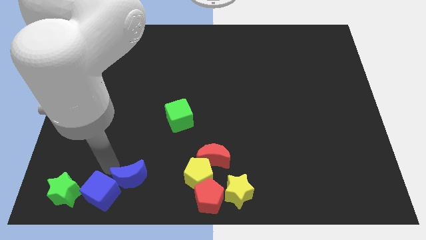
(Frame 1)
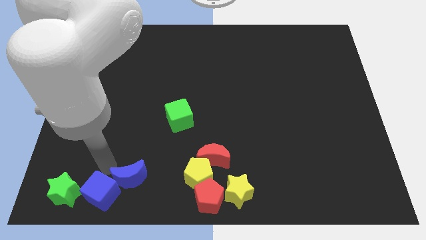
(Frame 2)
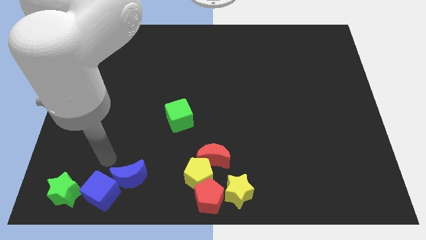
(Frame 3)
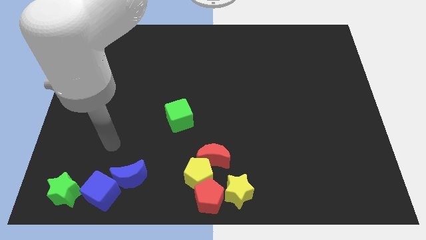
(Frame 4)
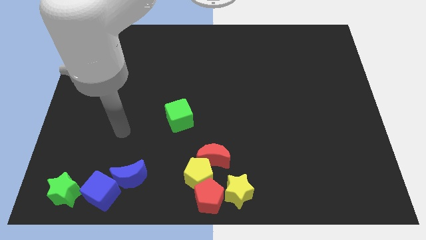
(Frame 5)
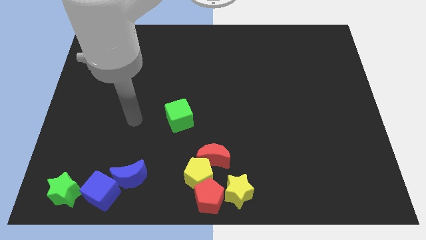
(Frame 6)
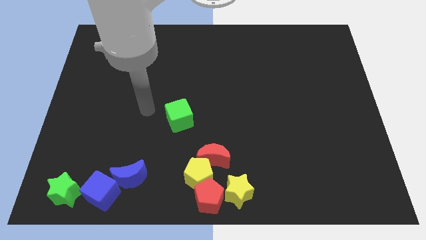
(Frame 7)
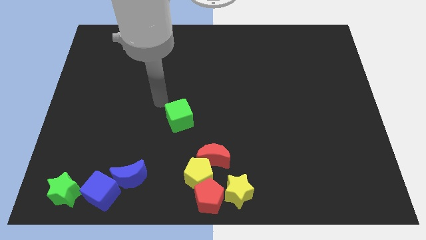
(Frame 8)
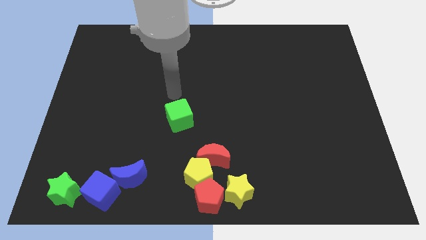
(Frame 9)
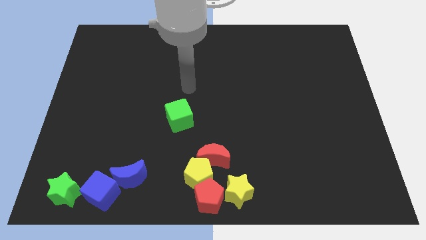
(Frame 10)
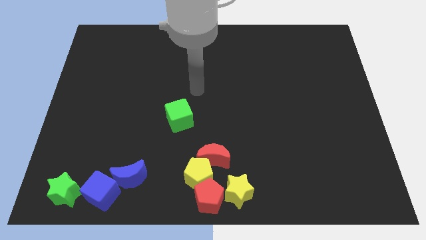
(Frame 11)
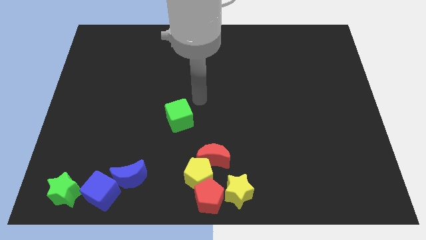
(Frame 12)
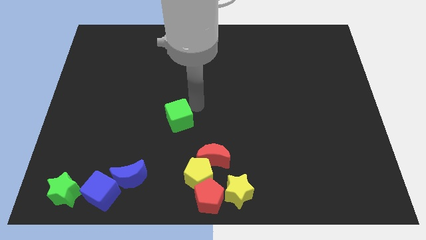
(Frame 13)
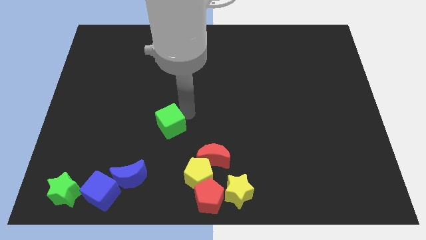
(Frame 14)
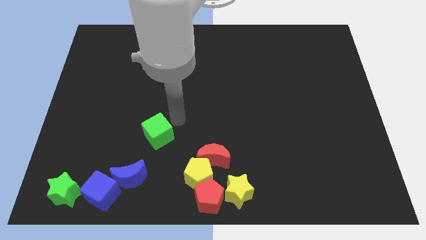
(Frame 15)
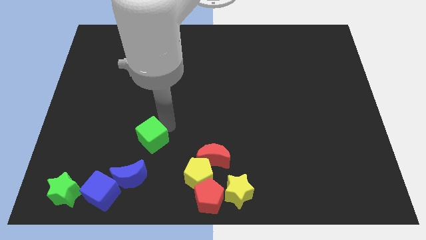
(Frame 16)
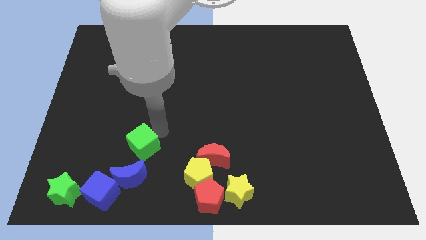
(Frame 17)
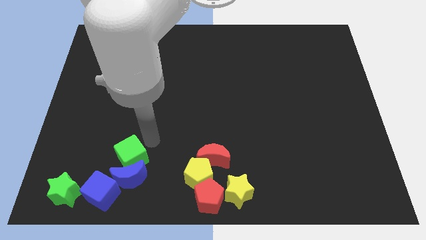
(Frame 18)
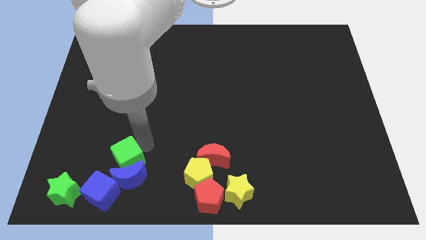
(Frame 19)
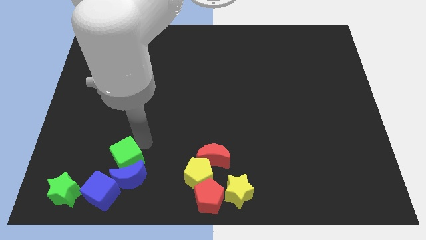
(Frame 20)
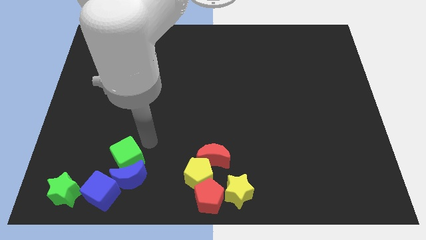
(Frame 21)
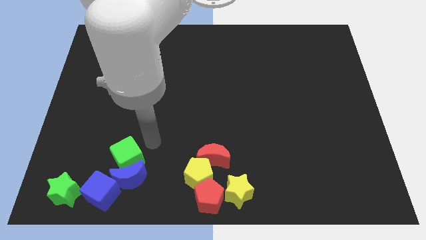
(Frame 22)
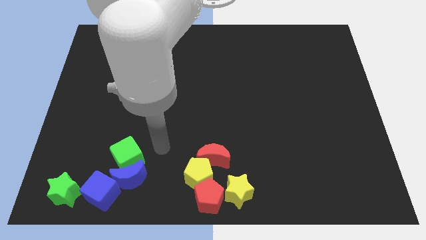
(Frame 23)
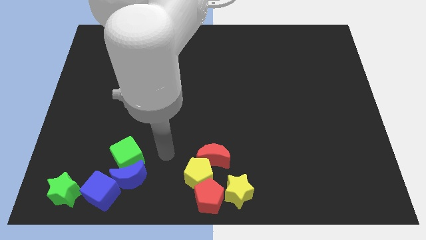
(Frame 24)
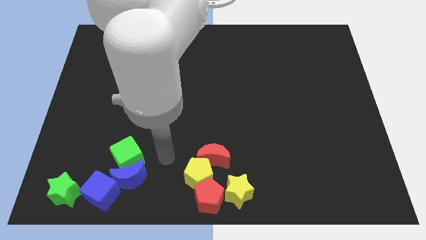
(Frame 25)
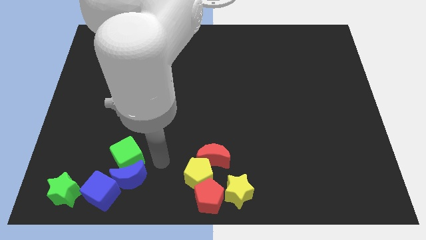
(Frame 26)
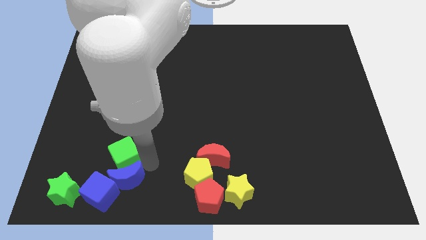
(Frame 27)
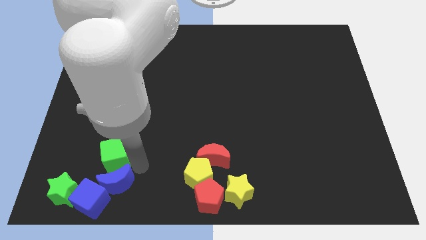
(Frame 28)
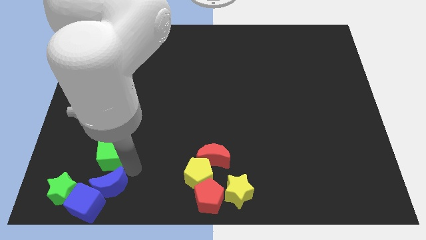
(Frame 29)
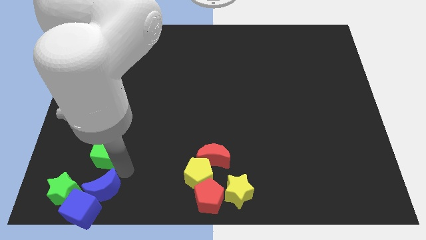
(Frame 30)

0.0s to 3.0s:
move the green cube into the blue crescent

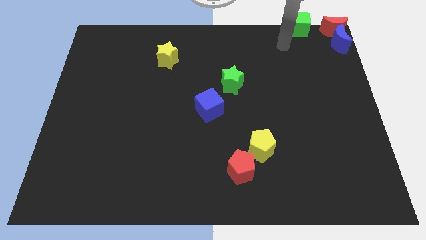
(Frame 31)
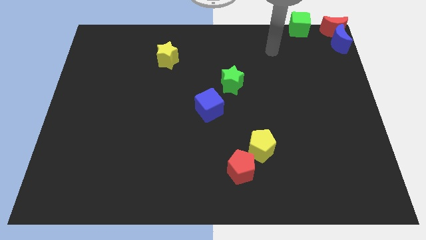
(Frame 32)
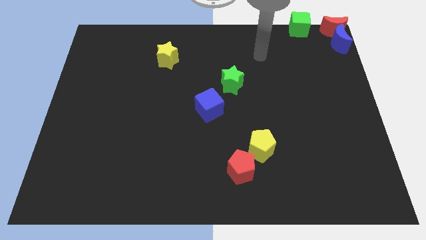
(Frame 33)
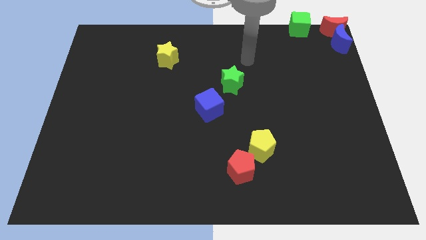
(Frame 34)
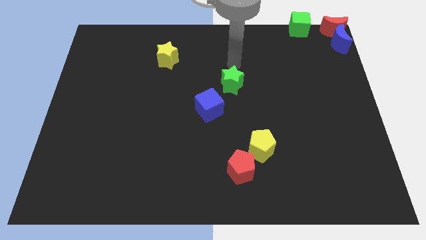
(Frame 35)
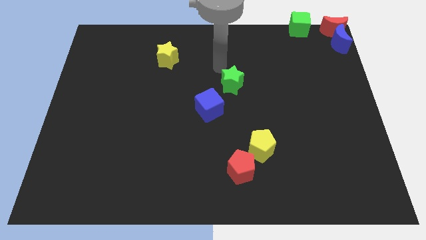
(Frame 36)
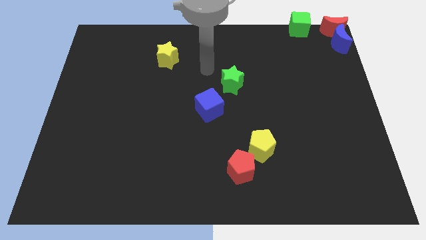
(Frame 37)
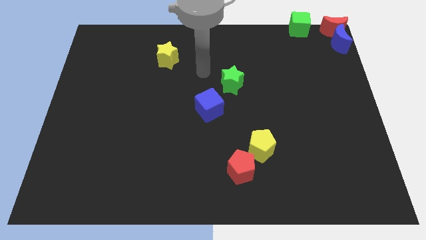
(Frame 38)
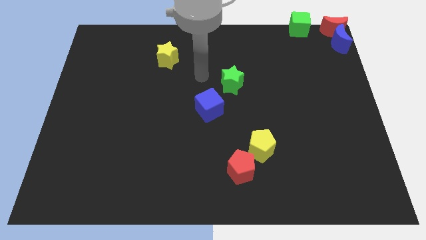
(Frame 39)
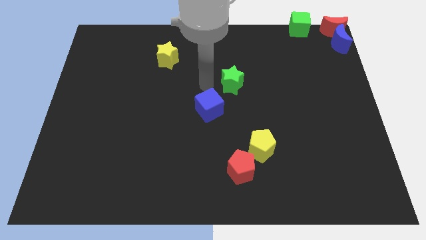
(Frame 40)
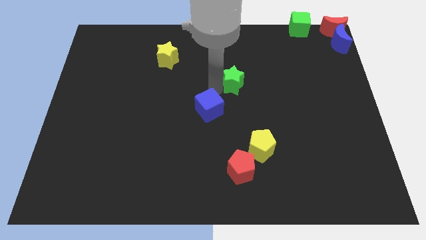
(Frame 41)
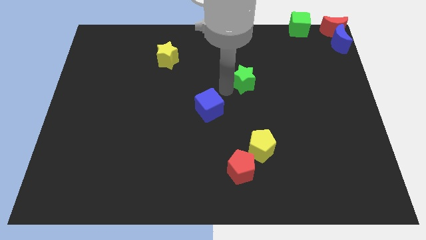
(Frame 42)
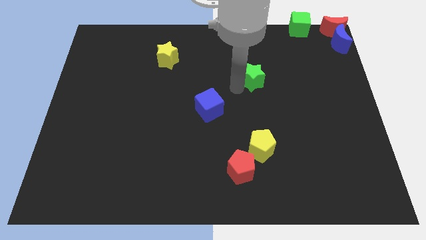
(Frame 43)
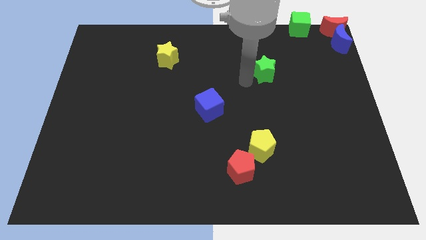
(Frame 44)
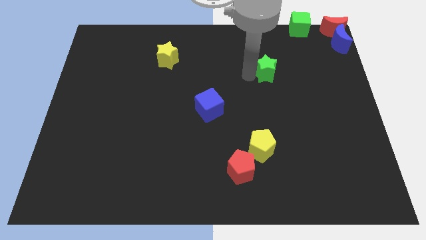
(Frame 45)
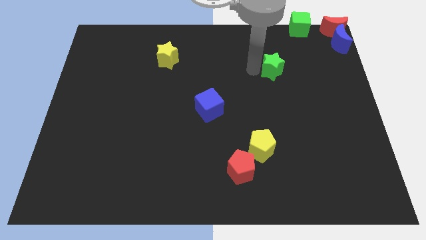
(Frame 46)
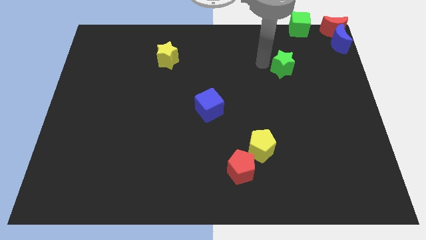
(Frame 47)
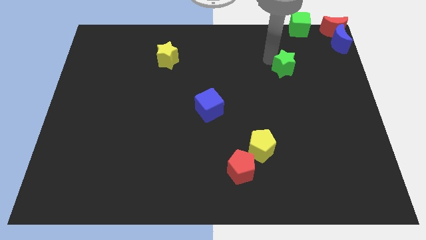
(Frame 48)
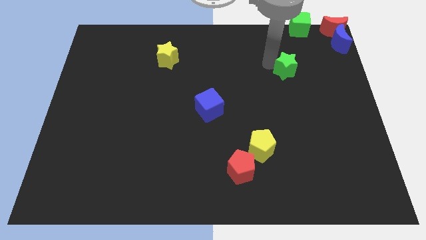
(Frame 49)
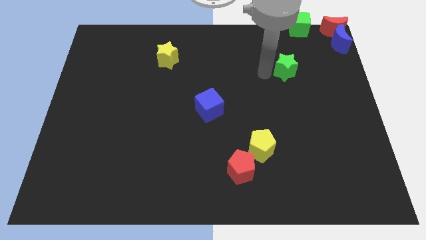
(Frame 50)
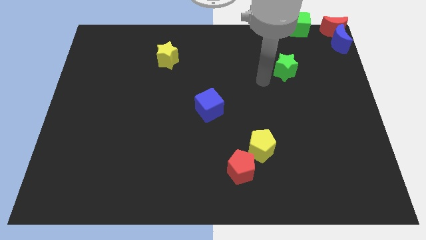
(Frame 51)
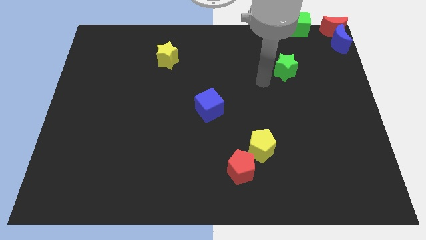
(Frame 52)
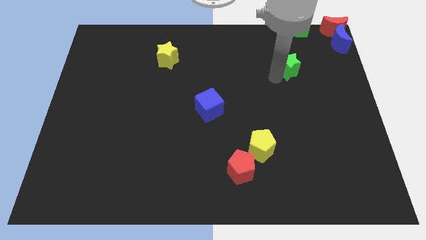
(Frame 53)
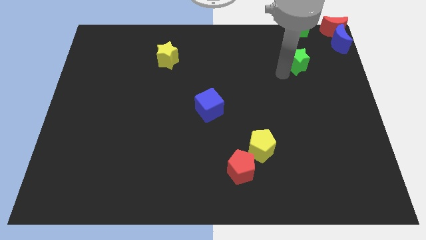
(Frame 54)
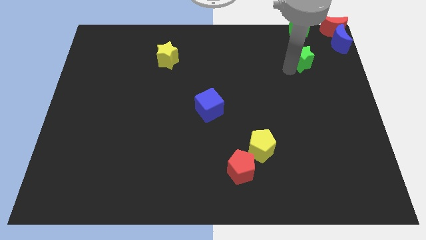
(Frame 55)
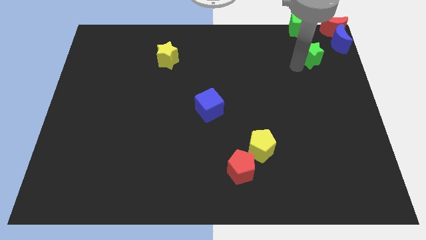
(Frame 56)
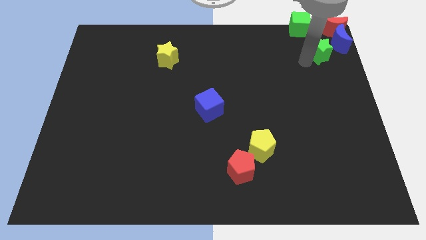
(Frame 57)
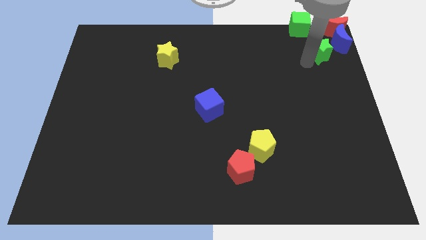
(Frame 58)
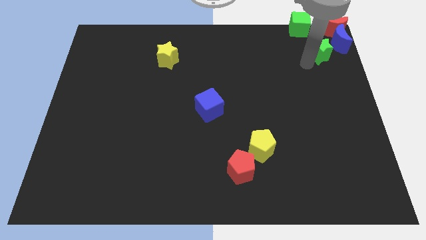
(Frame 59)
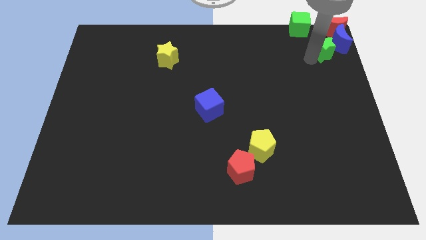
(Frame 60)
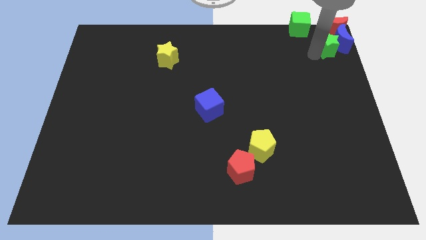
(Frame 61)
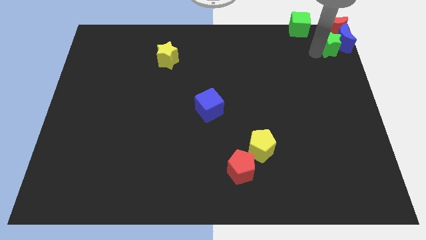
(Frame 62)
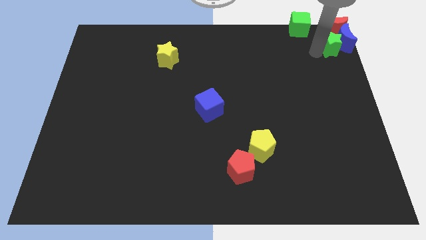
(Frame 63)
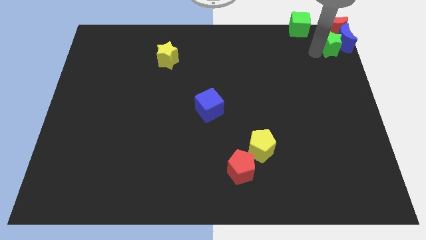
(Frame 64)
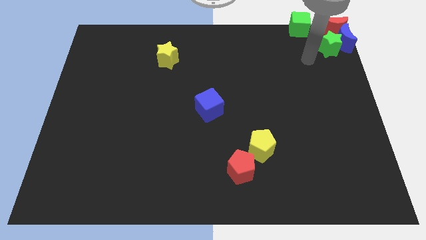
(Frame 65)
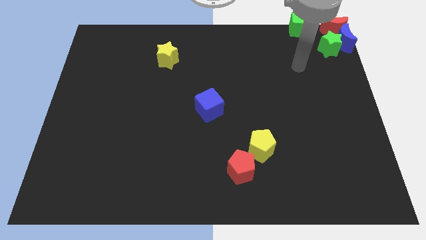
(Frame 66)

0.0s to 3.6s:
place green star to the top right corner of the board

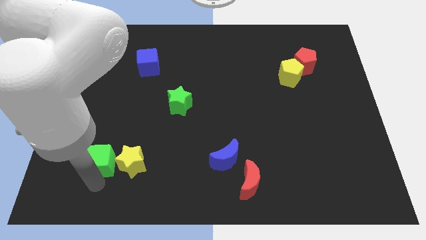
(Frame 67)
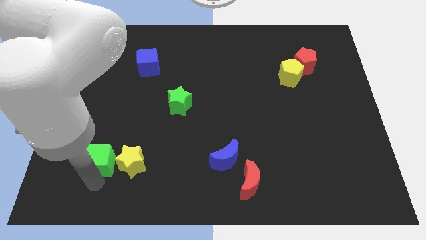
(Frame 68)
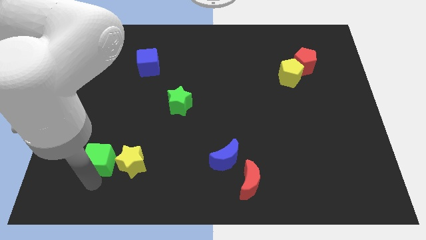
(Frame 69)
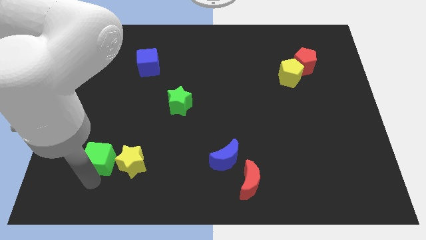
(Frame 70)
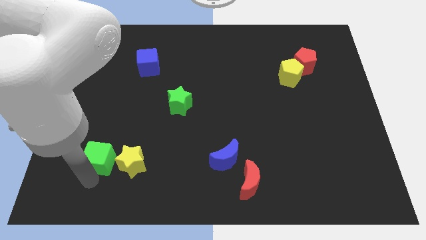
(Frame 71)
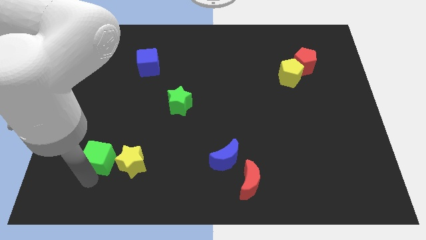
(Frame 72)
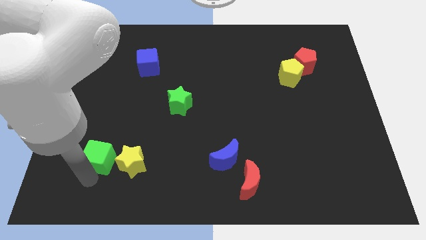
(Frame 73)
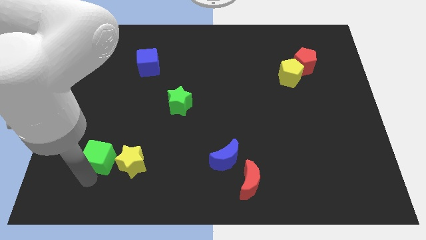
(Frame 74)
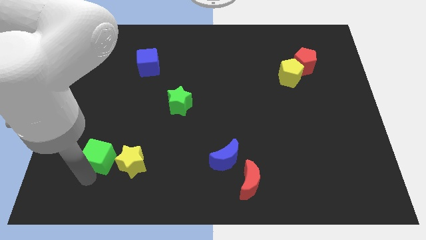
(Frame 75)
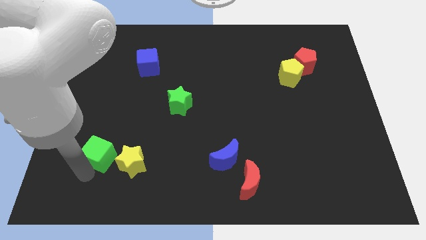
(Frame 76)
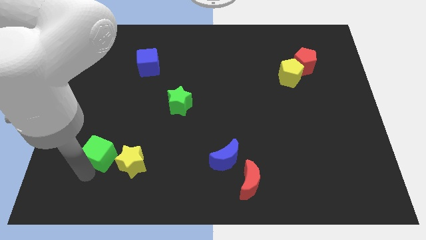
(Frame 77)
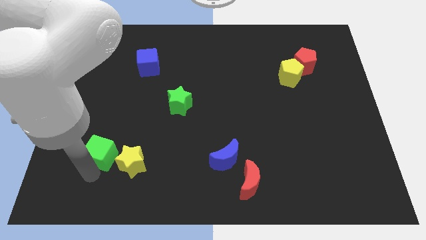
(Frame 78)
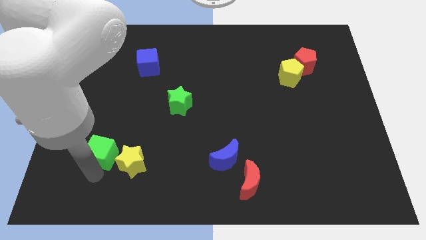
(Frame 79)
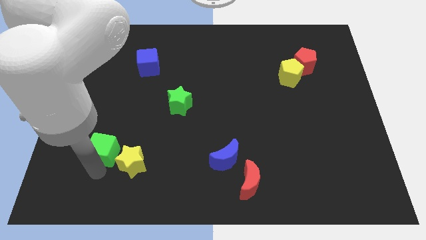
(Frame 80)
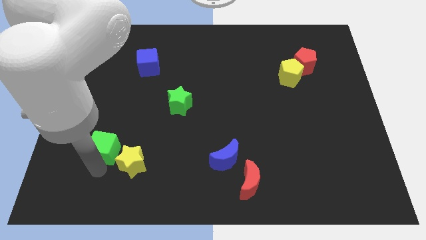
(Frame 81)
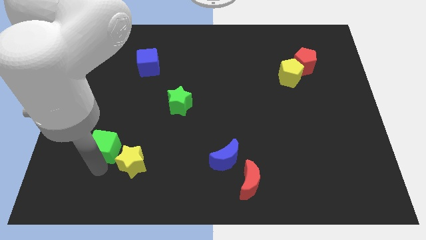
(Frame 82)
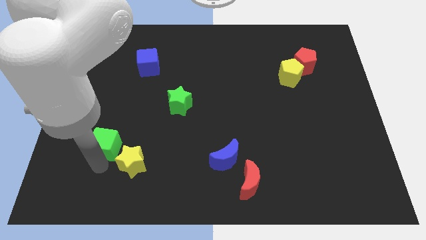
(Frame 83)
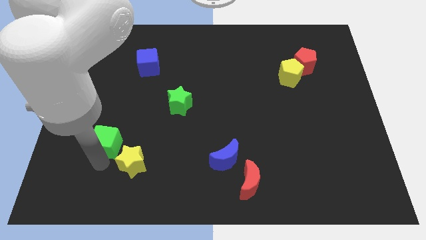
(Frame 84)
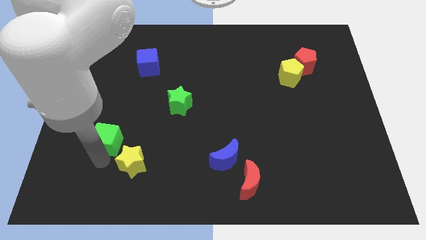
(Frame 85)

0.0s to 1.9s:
place green cube to the top left of yellow star

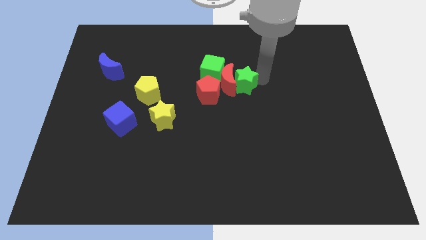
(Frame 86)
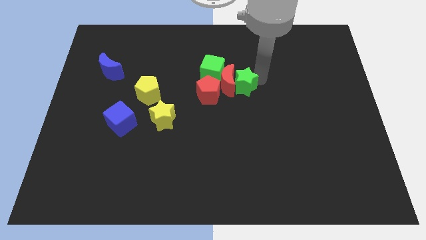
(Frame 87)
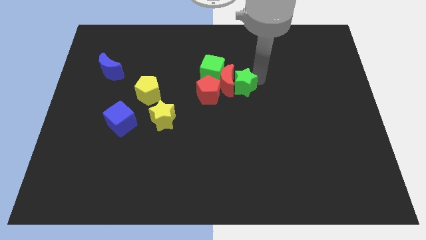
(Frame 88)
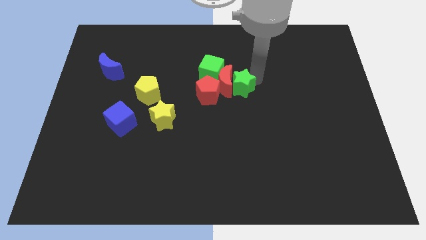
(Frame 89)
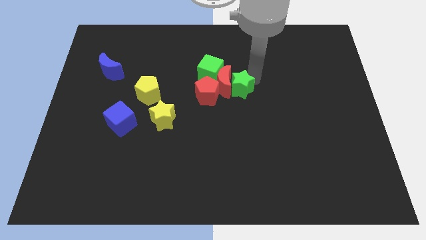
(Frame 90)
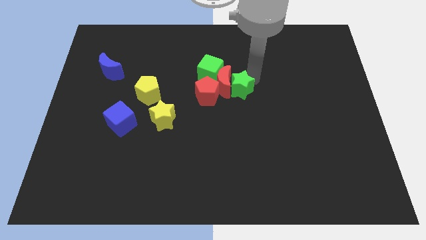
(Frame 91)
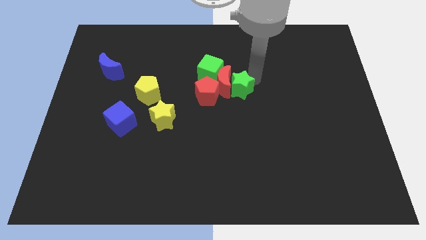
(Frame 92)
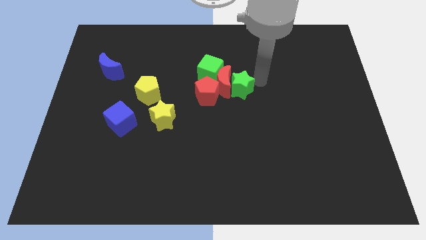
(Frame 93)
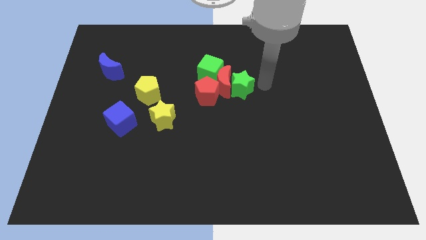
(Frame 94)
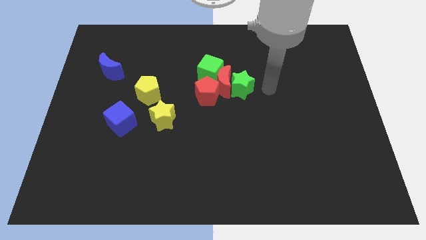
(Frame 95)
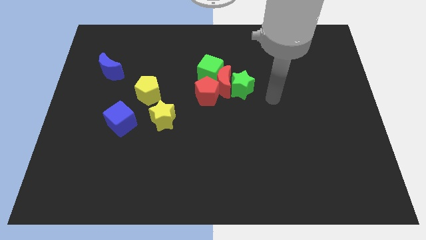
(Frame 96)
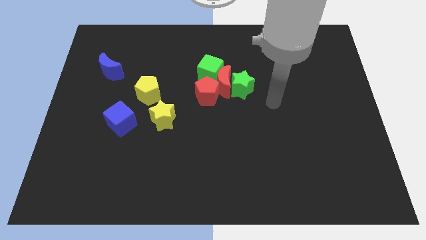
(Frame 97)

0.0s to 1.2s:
push the red blocks and green blocks towards the top center of board
